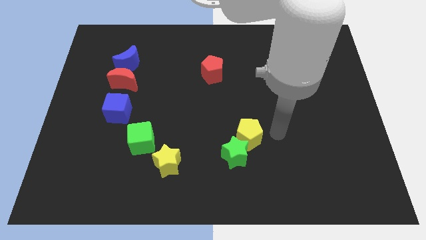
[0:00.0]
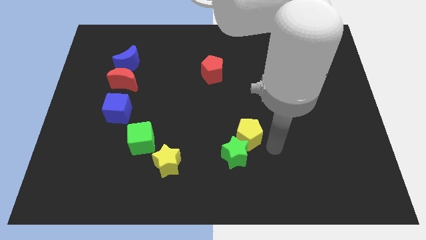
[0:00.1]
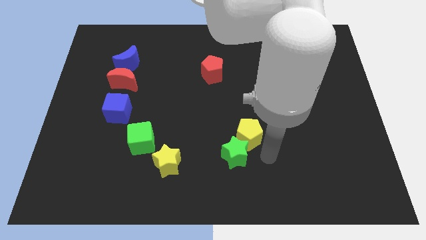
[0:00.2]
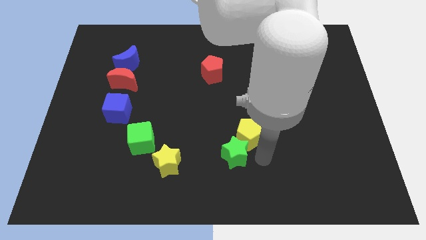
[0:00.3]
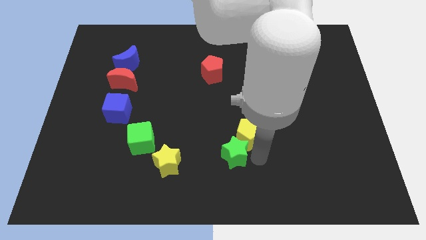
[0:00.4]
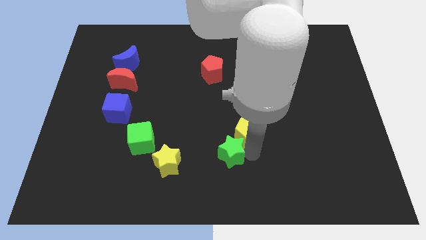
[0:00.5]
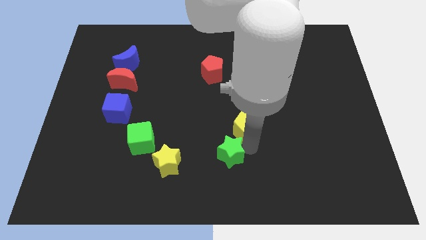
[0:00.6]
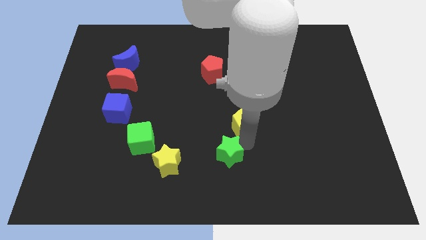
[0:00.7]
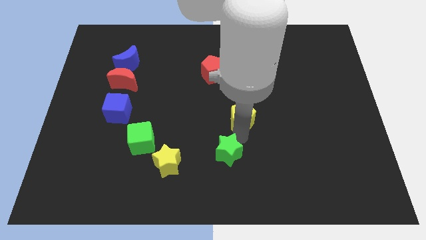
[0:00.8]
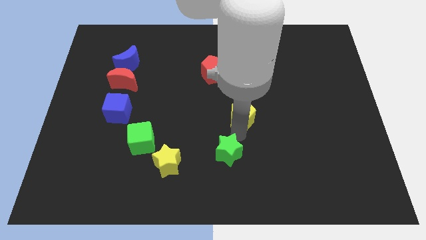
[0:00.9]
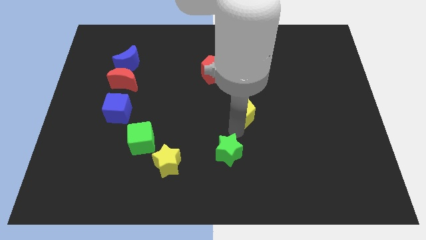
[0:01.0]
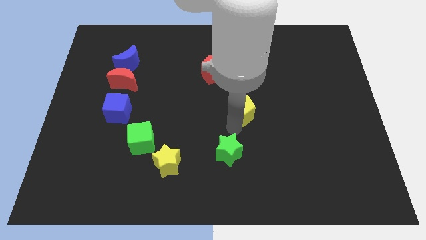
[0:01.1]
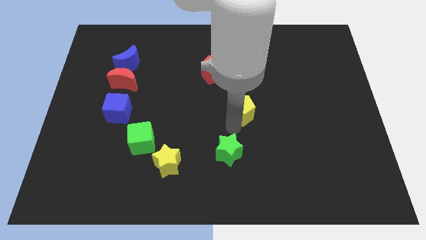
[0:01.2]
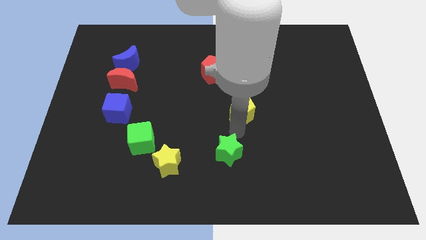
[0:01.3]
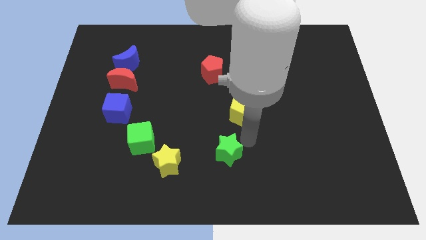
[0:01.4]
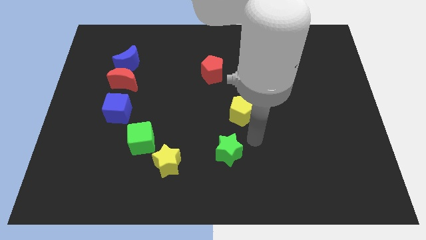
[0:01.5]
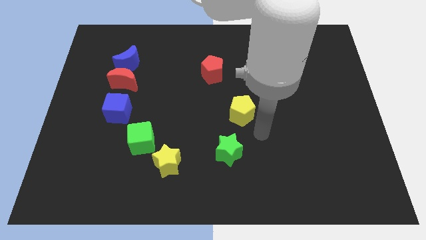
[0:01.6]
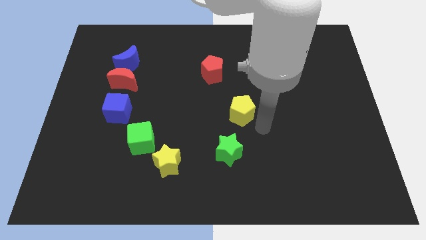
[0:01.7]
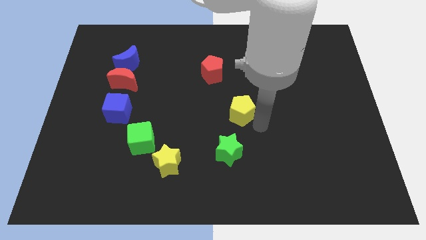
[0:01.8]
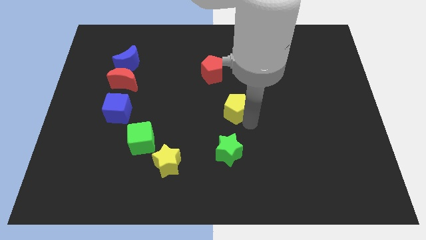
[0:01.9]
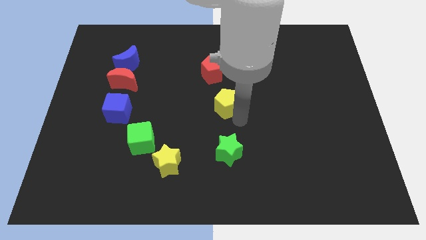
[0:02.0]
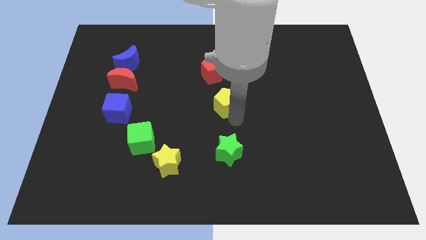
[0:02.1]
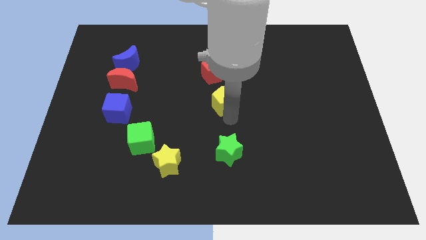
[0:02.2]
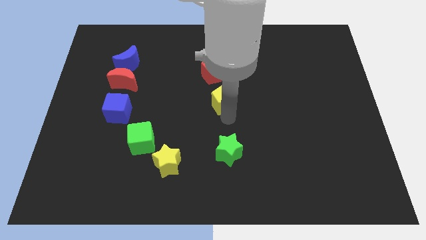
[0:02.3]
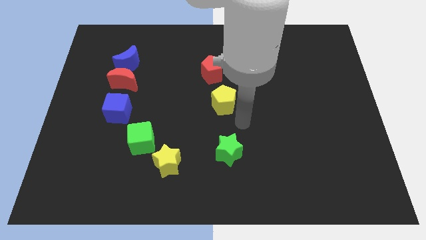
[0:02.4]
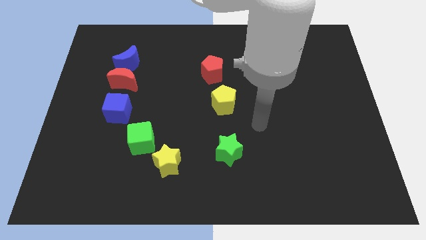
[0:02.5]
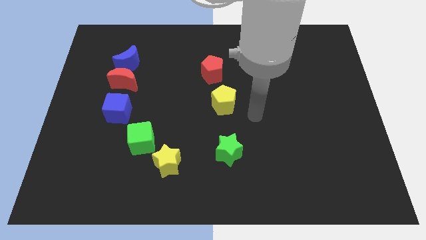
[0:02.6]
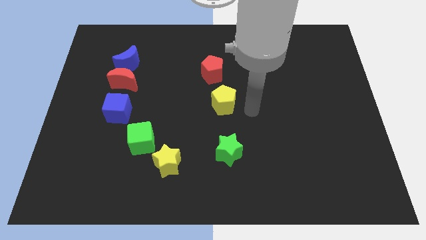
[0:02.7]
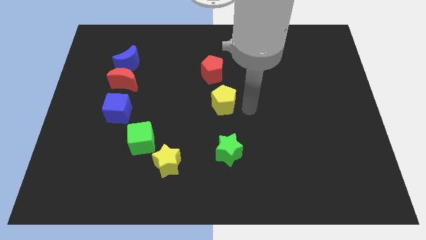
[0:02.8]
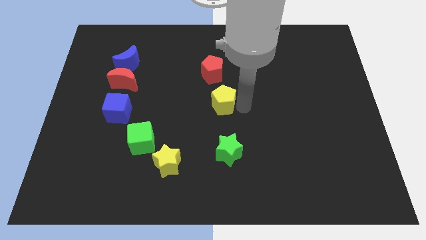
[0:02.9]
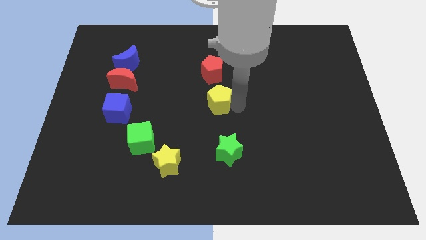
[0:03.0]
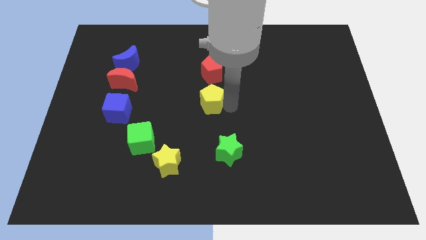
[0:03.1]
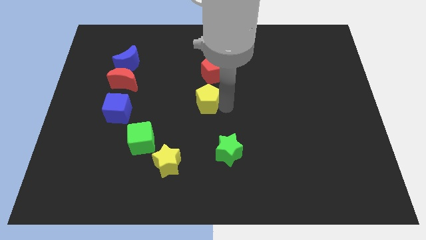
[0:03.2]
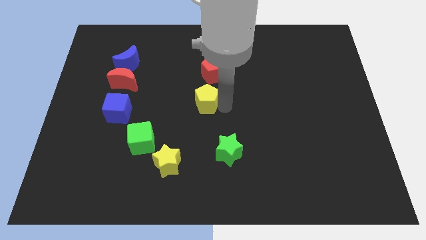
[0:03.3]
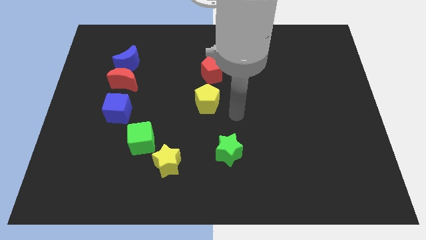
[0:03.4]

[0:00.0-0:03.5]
push yellow pentagon underneath the red pentagon

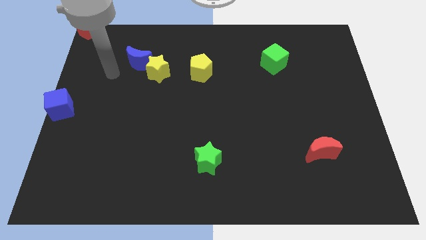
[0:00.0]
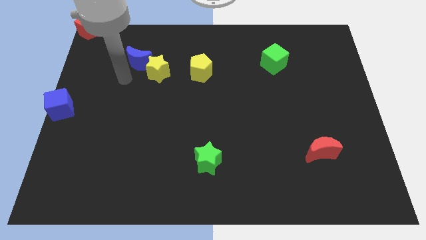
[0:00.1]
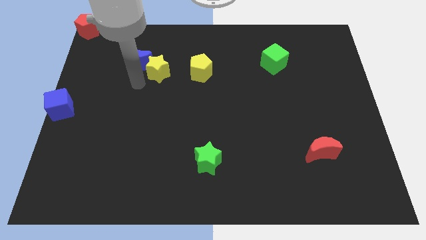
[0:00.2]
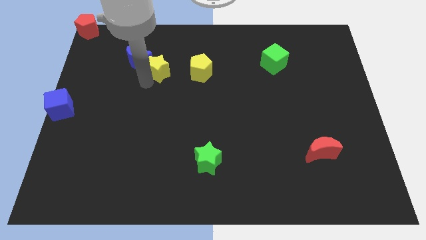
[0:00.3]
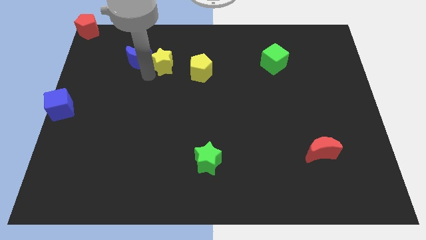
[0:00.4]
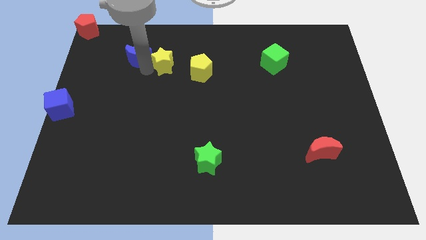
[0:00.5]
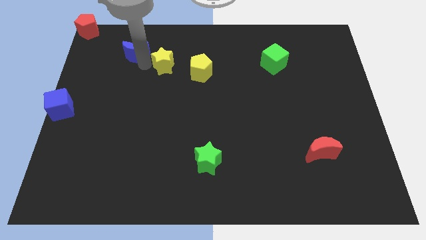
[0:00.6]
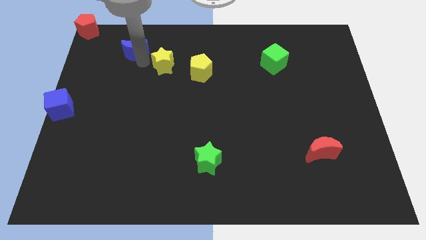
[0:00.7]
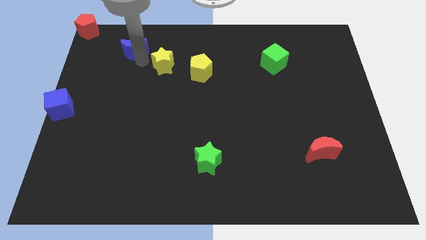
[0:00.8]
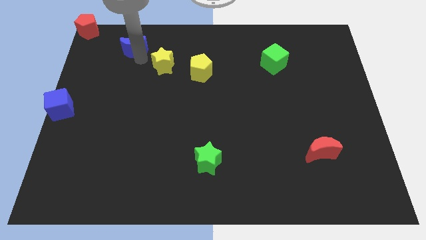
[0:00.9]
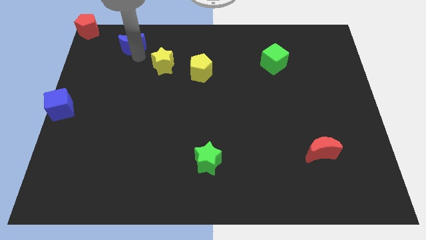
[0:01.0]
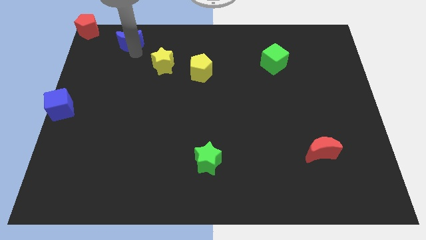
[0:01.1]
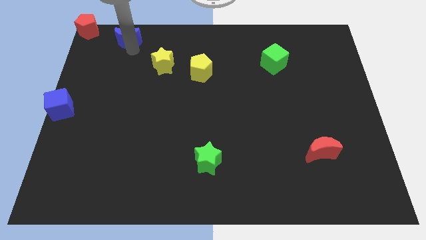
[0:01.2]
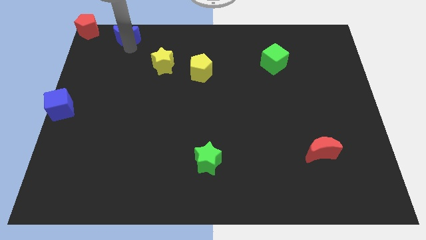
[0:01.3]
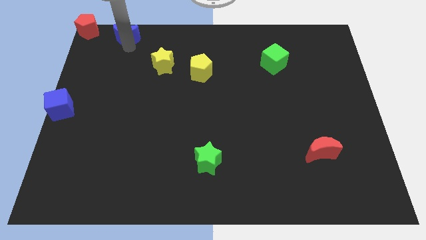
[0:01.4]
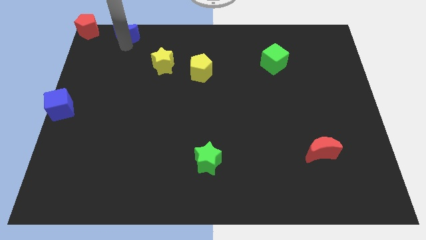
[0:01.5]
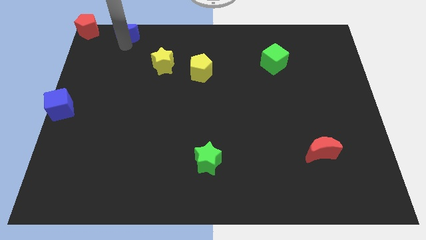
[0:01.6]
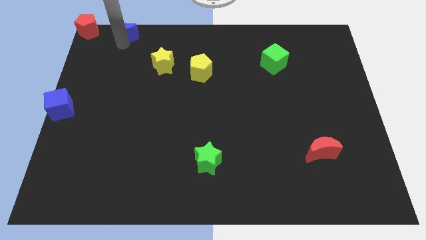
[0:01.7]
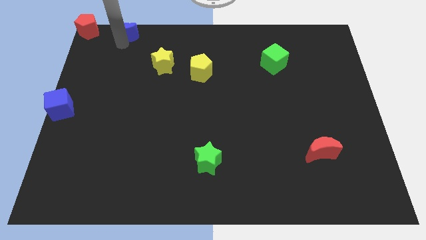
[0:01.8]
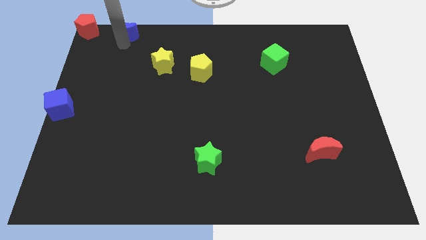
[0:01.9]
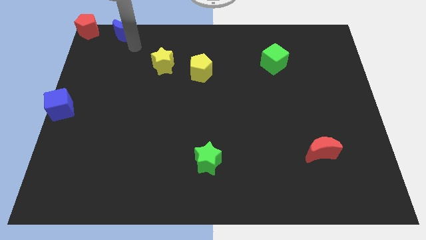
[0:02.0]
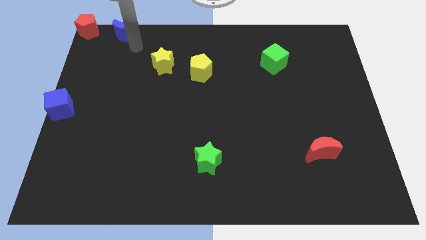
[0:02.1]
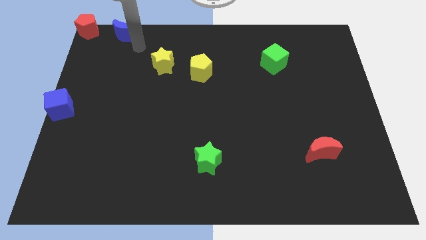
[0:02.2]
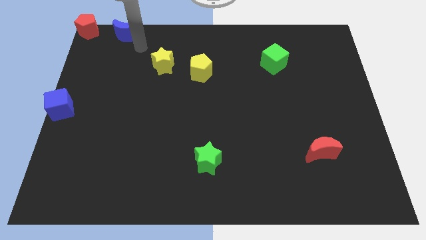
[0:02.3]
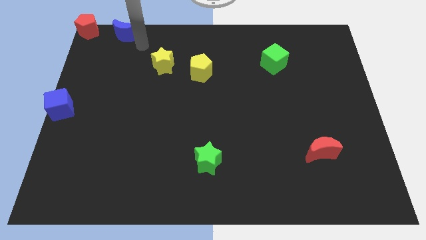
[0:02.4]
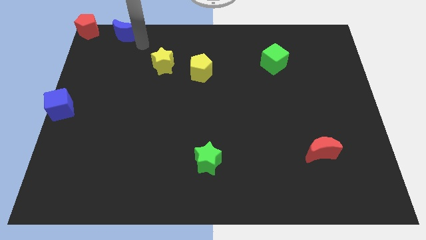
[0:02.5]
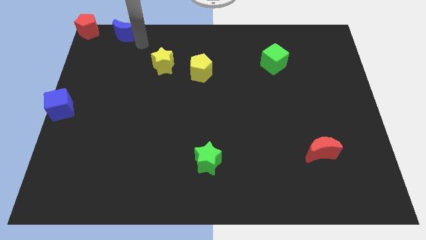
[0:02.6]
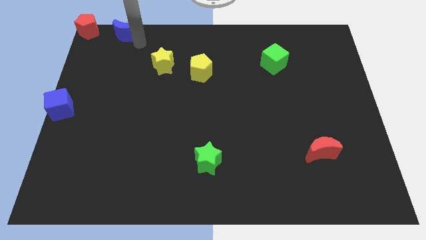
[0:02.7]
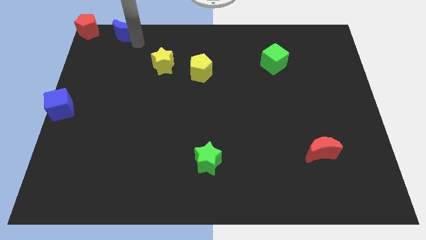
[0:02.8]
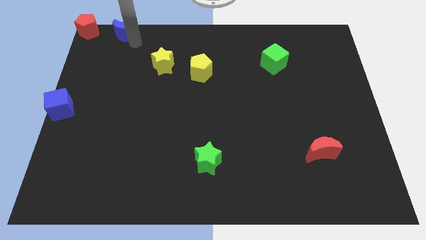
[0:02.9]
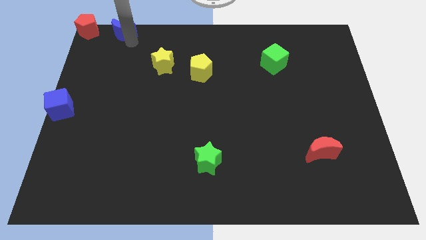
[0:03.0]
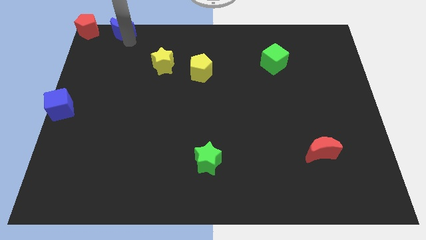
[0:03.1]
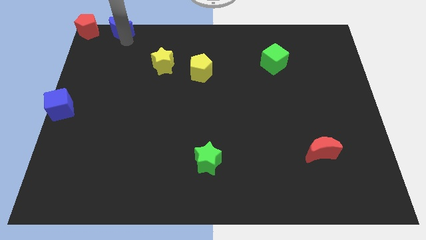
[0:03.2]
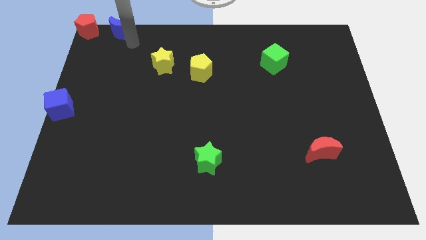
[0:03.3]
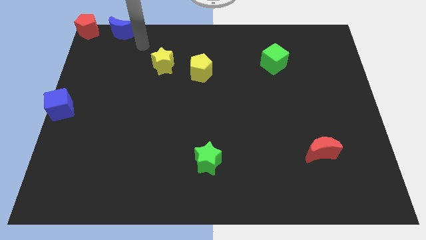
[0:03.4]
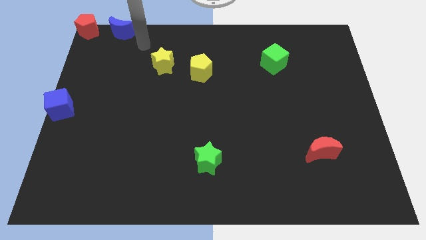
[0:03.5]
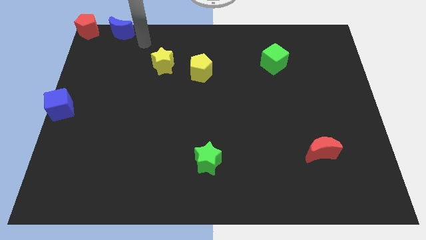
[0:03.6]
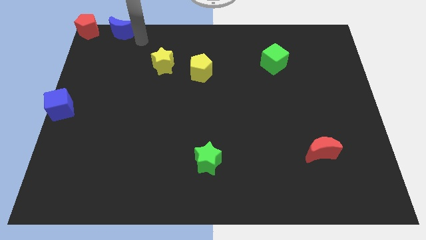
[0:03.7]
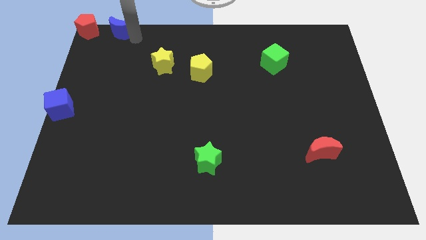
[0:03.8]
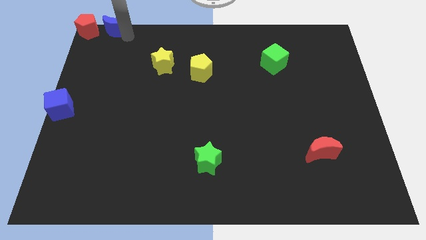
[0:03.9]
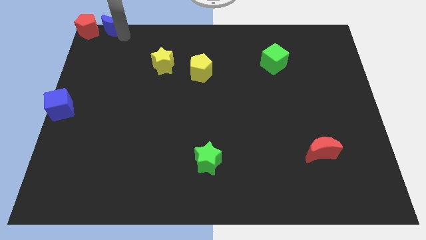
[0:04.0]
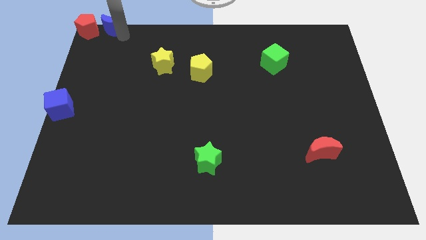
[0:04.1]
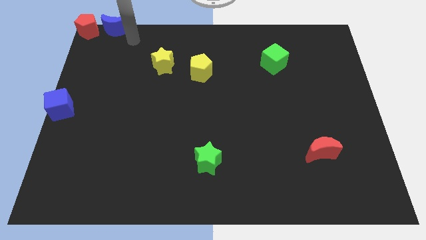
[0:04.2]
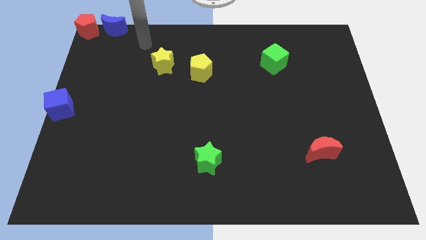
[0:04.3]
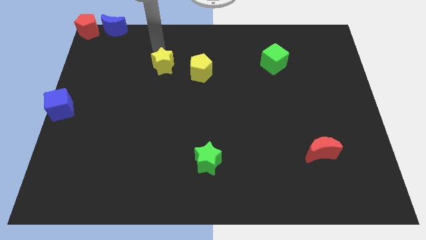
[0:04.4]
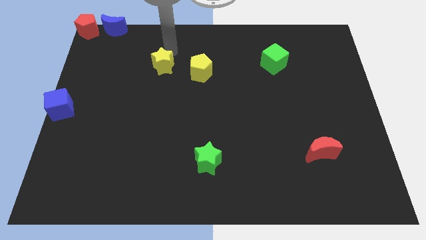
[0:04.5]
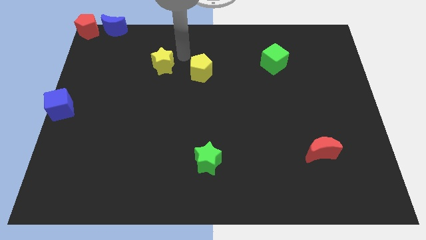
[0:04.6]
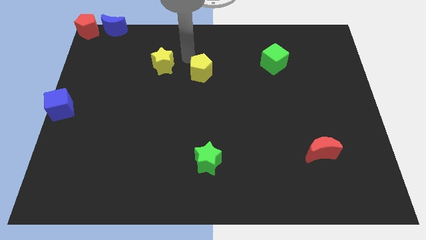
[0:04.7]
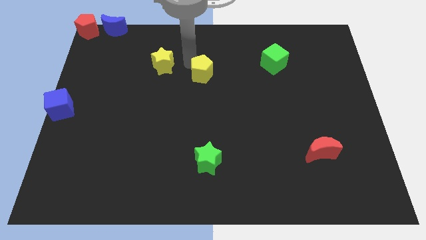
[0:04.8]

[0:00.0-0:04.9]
push the blue crescent away from the yellow star

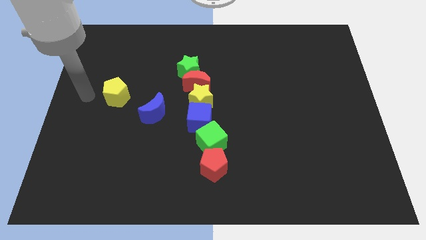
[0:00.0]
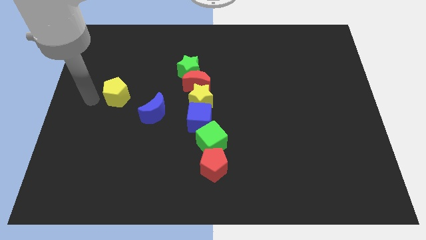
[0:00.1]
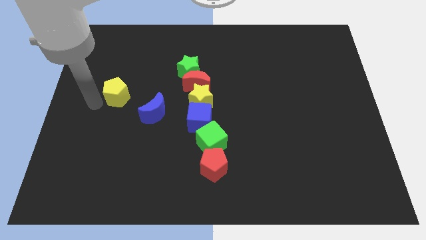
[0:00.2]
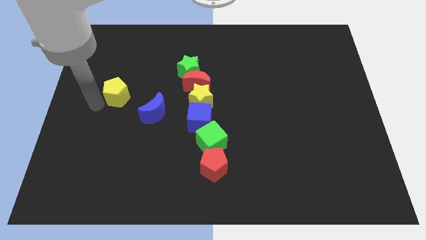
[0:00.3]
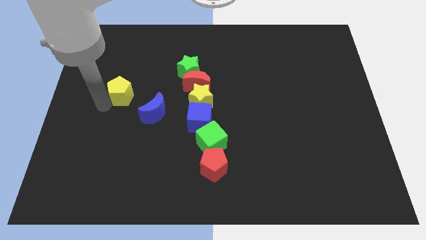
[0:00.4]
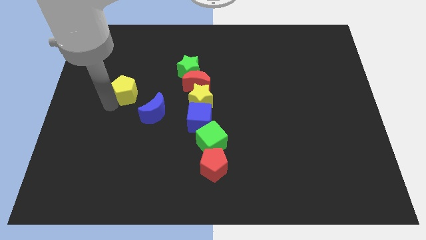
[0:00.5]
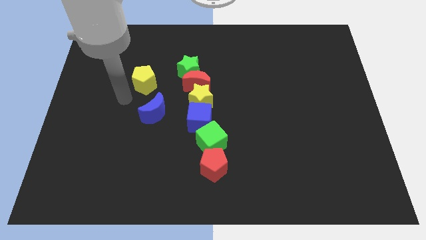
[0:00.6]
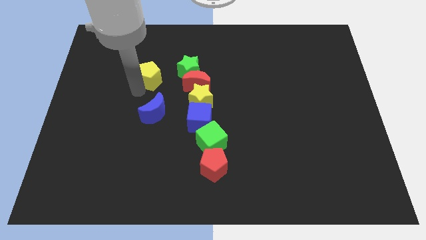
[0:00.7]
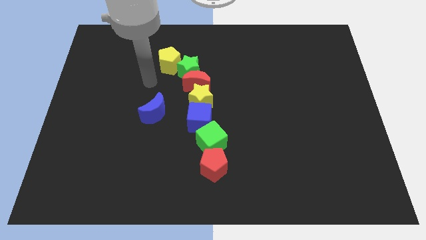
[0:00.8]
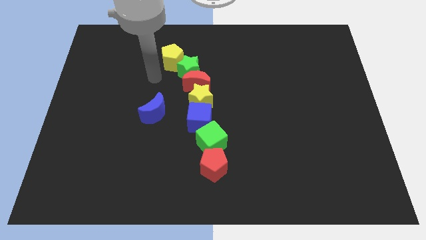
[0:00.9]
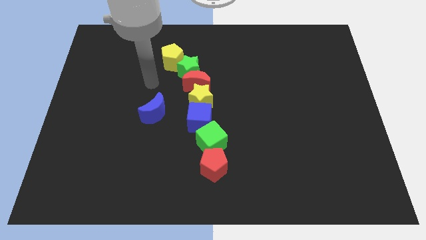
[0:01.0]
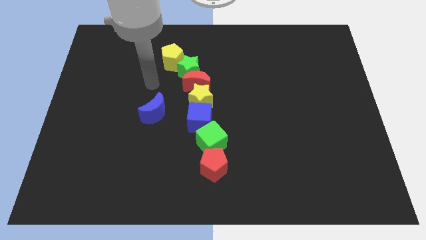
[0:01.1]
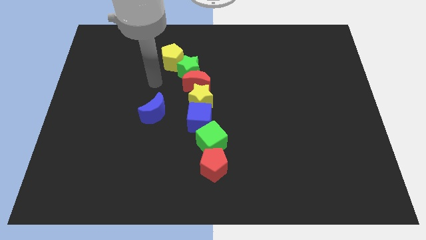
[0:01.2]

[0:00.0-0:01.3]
slide the yellow pentagon close to the green star
